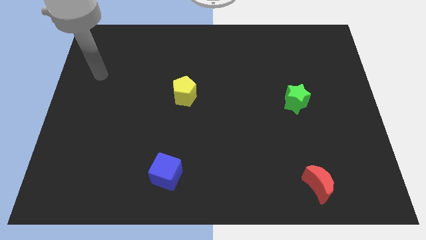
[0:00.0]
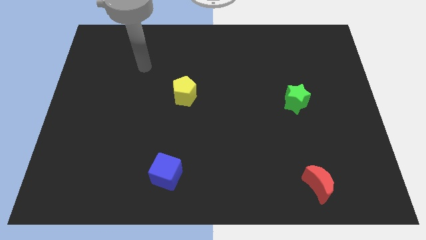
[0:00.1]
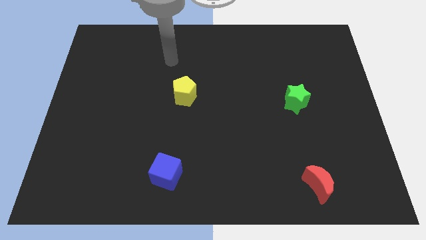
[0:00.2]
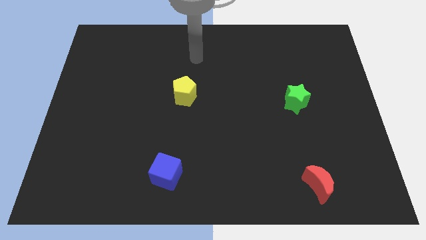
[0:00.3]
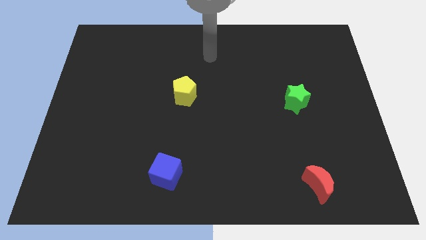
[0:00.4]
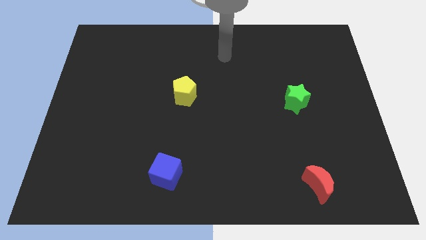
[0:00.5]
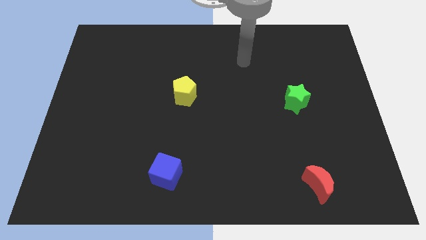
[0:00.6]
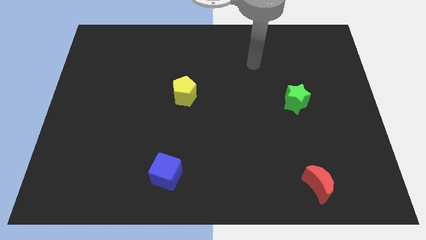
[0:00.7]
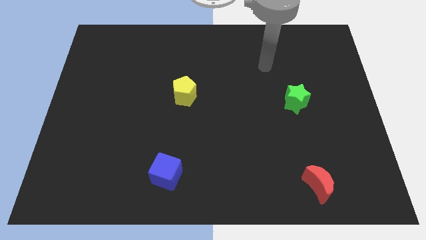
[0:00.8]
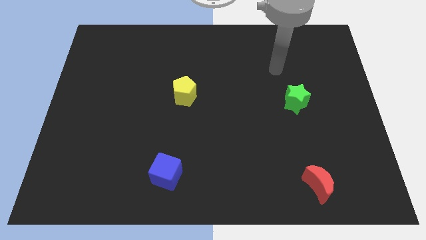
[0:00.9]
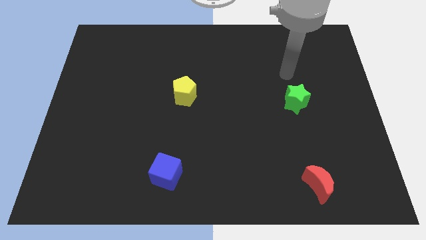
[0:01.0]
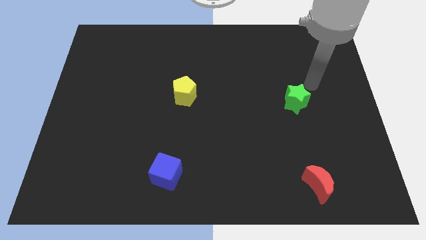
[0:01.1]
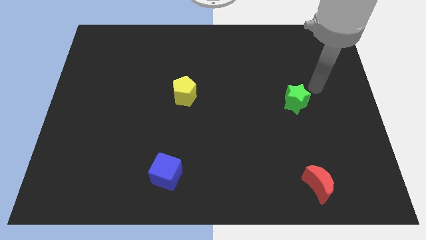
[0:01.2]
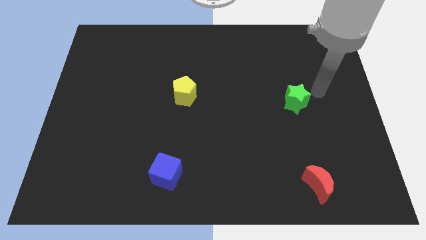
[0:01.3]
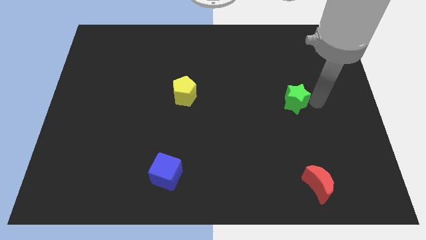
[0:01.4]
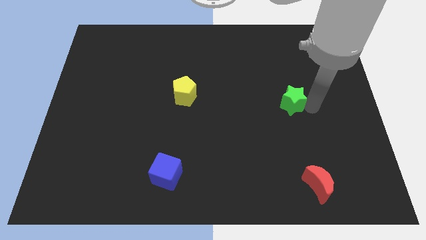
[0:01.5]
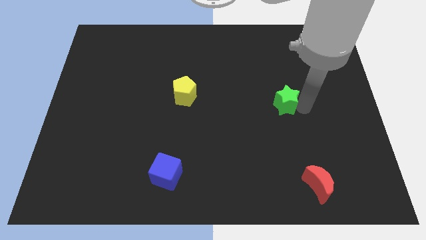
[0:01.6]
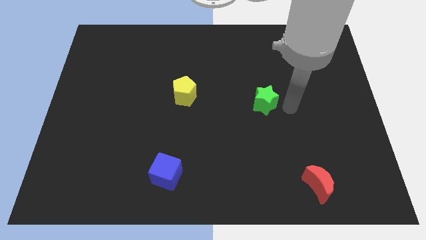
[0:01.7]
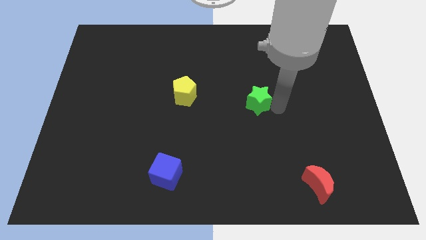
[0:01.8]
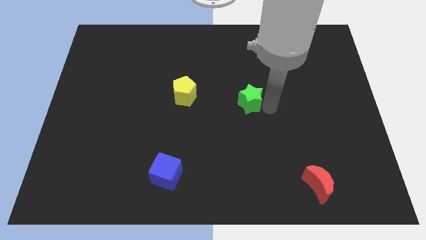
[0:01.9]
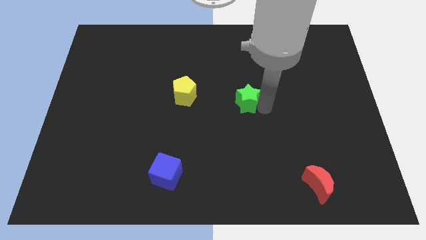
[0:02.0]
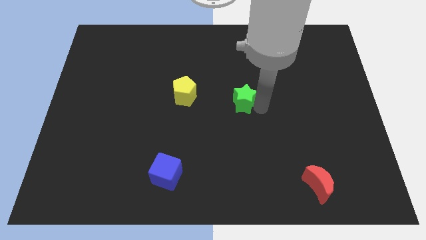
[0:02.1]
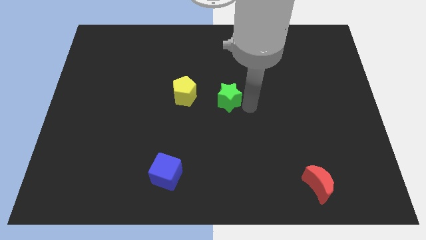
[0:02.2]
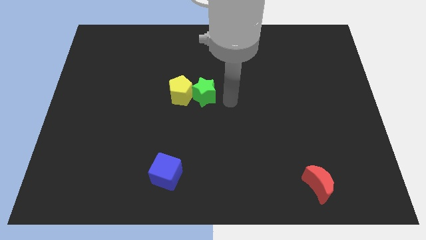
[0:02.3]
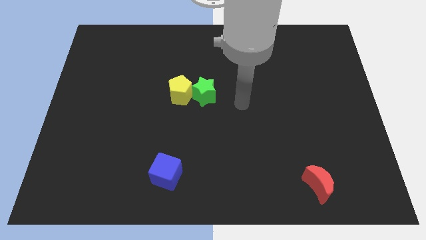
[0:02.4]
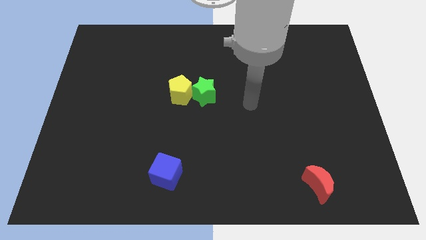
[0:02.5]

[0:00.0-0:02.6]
put the green block towards the yellow block

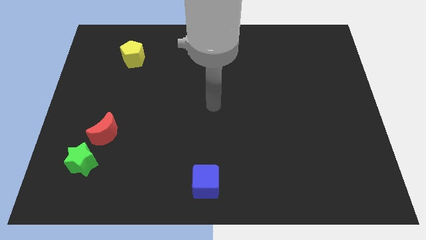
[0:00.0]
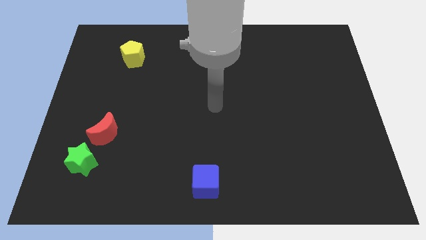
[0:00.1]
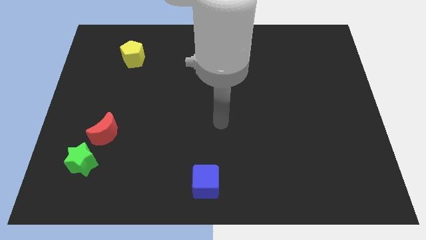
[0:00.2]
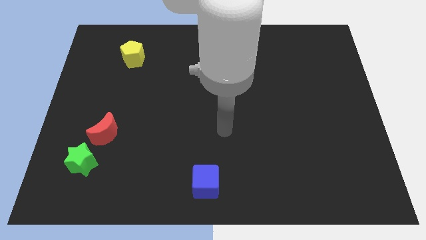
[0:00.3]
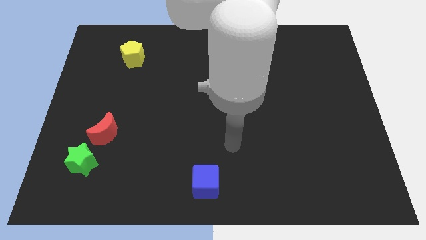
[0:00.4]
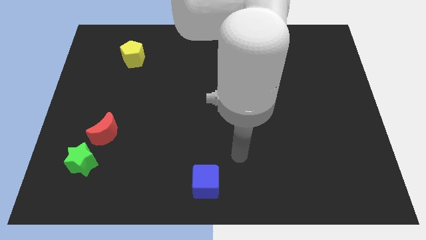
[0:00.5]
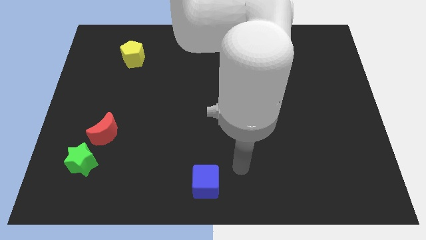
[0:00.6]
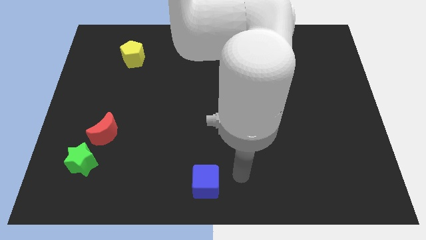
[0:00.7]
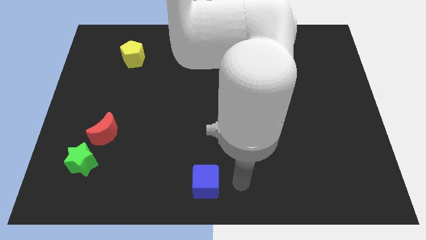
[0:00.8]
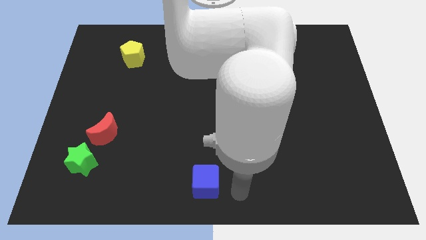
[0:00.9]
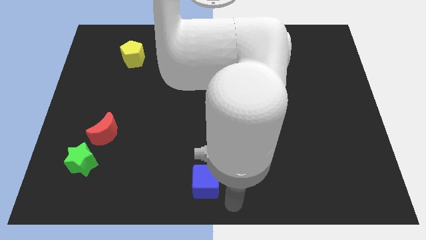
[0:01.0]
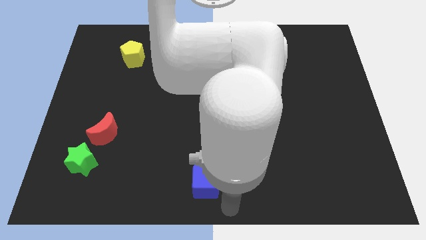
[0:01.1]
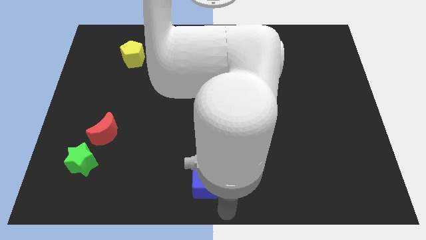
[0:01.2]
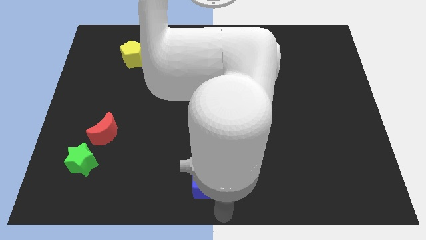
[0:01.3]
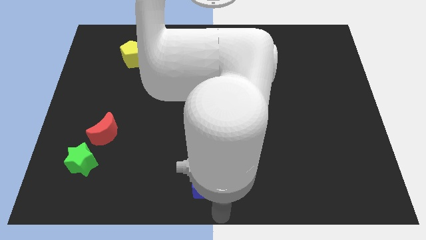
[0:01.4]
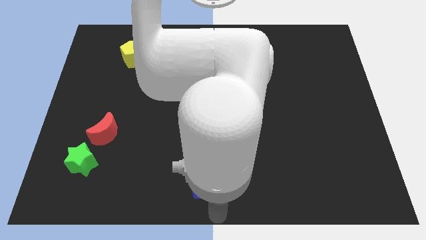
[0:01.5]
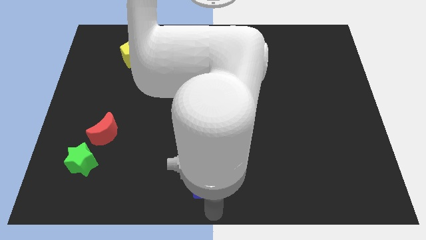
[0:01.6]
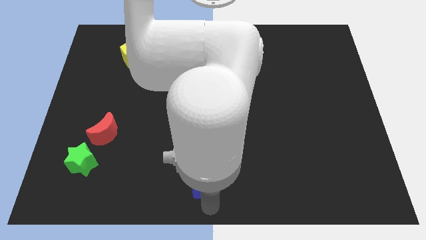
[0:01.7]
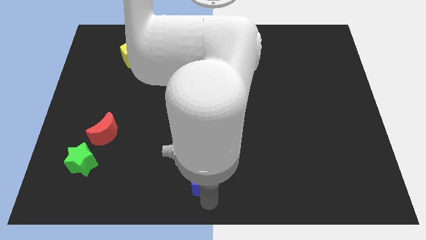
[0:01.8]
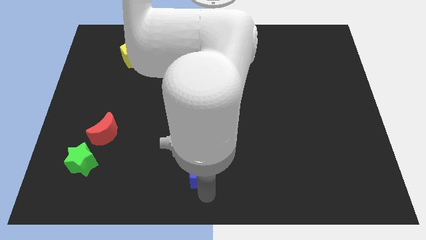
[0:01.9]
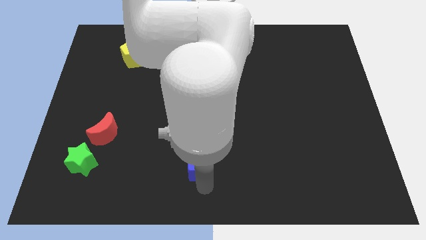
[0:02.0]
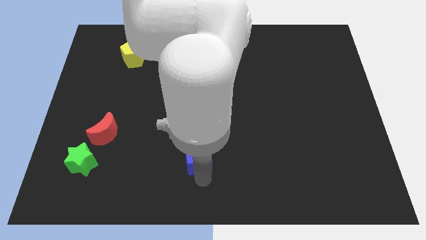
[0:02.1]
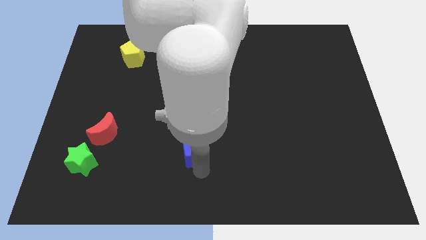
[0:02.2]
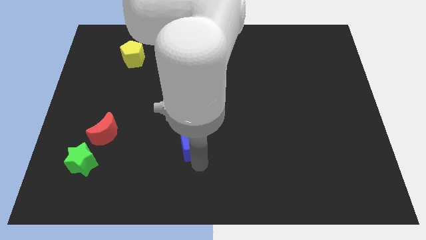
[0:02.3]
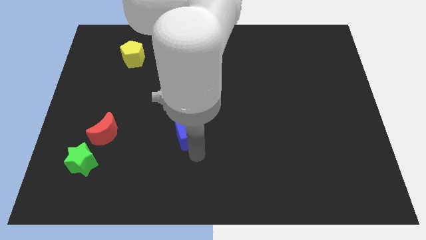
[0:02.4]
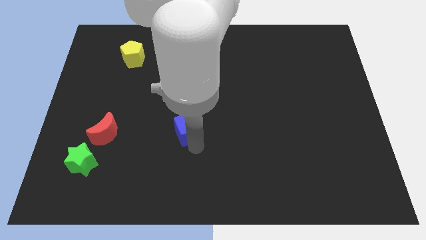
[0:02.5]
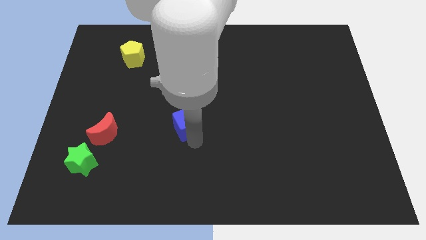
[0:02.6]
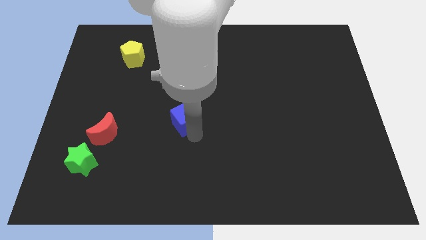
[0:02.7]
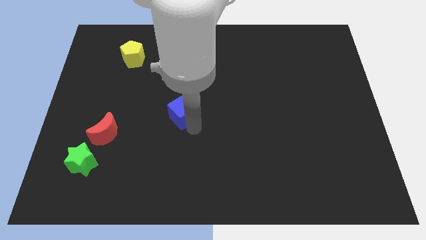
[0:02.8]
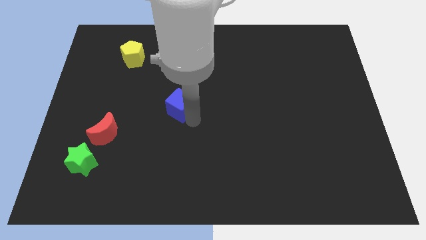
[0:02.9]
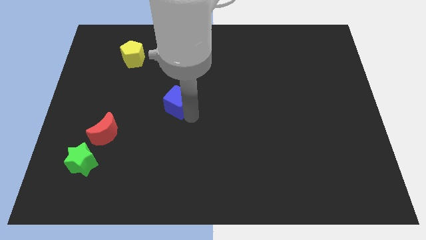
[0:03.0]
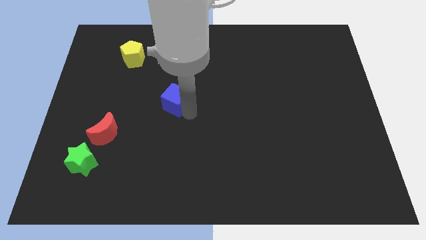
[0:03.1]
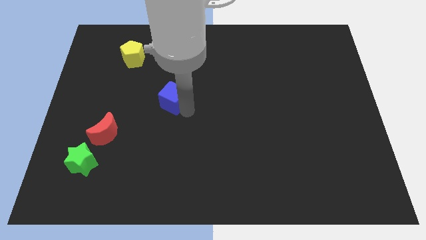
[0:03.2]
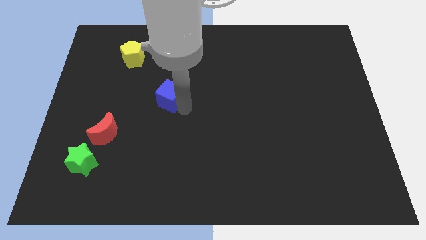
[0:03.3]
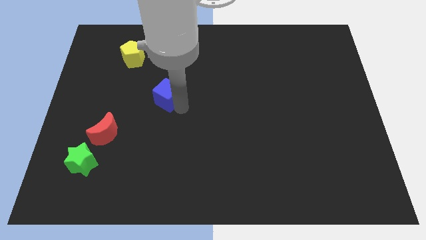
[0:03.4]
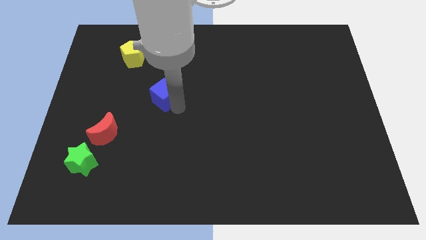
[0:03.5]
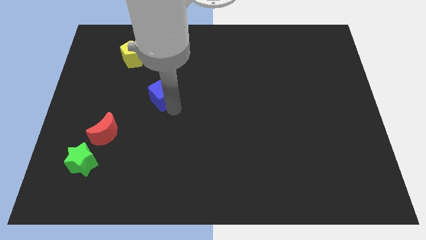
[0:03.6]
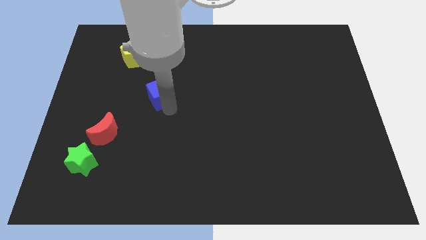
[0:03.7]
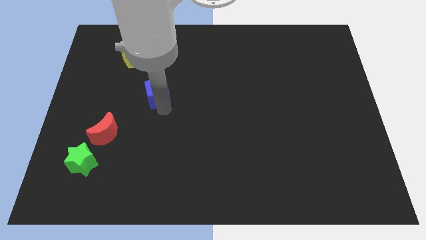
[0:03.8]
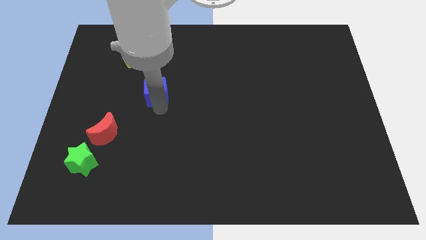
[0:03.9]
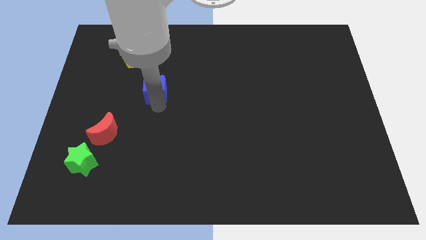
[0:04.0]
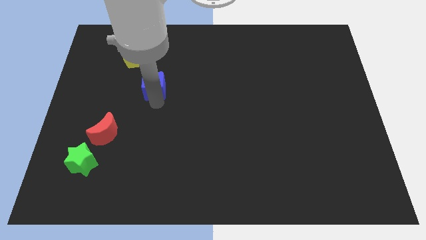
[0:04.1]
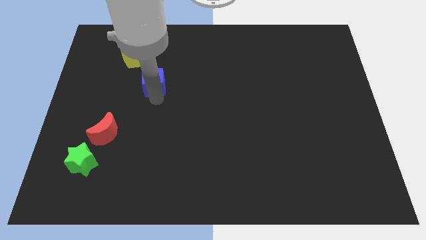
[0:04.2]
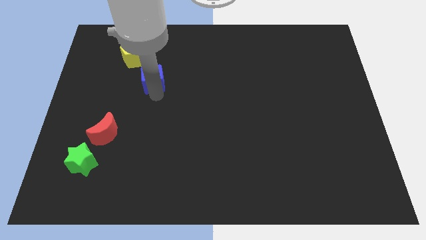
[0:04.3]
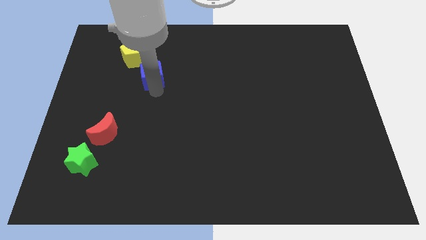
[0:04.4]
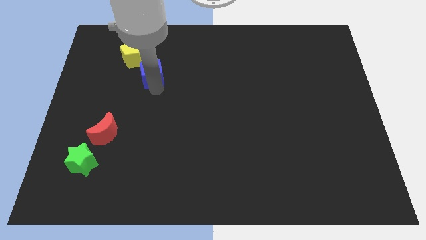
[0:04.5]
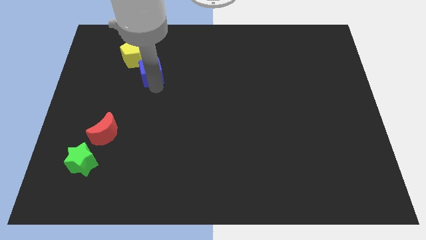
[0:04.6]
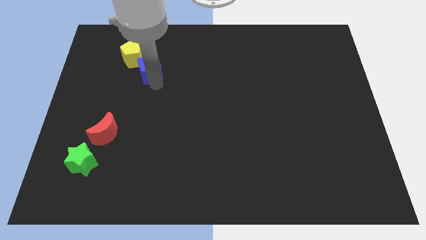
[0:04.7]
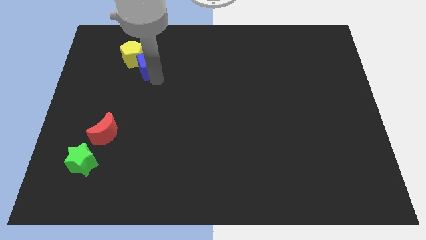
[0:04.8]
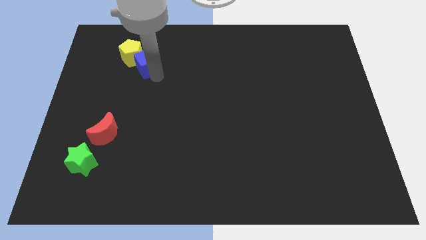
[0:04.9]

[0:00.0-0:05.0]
push the cube next to the yellow block

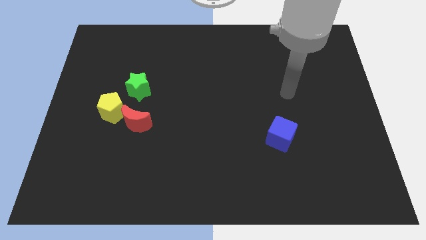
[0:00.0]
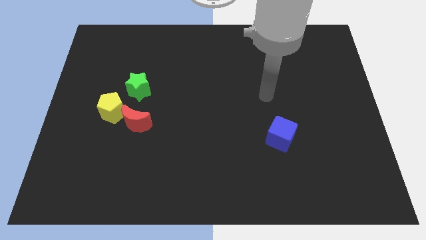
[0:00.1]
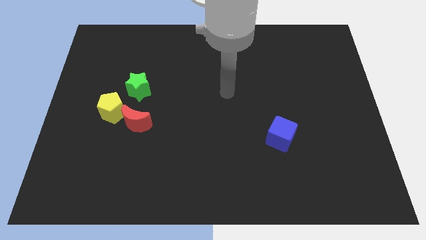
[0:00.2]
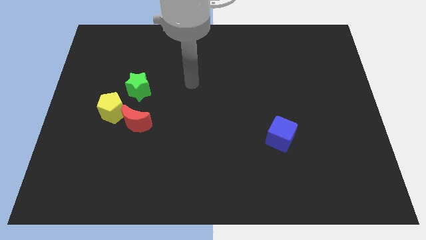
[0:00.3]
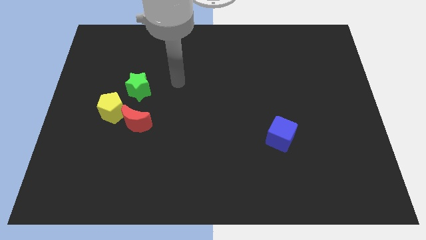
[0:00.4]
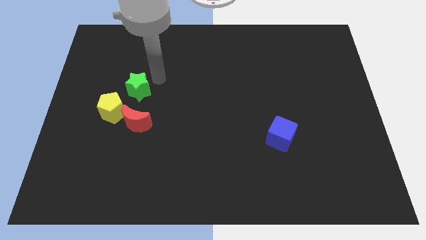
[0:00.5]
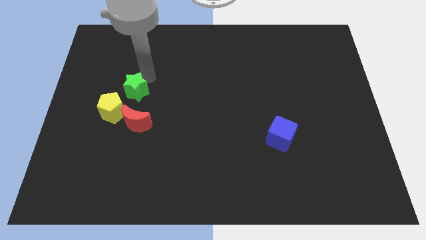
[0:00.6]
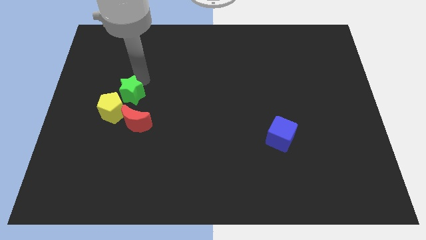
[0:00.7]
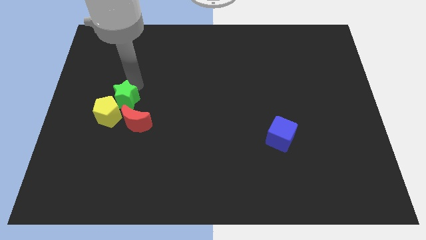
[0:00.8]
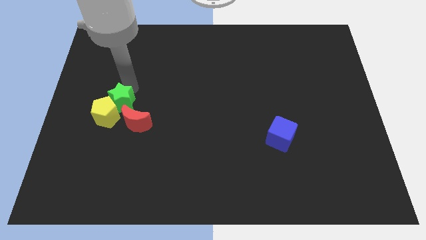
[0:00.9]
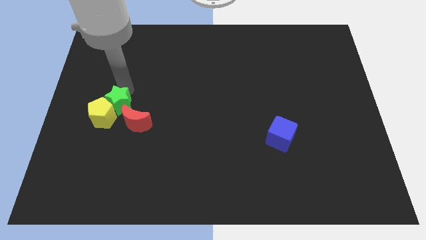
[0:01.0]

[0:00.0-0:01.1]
move the green block towards the yellow block

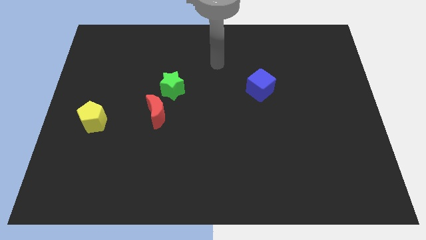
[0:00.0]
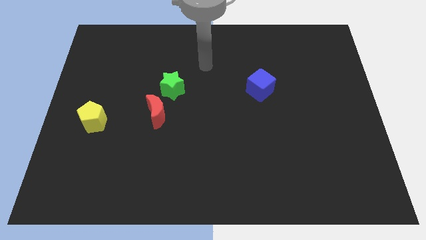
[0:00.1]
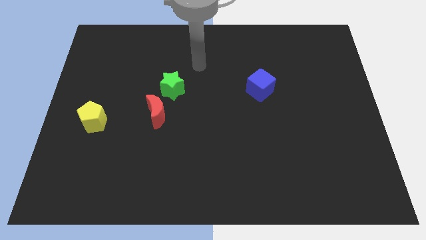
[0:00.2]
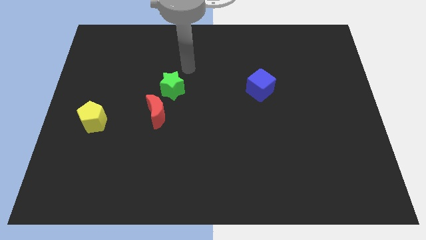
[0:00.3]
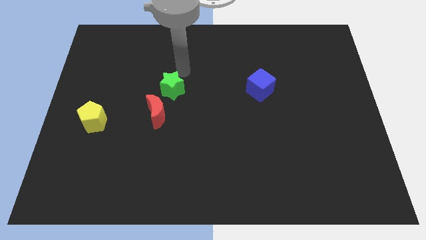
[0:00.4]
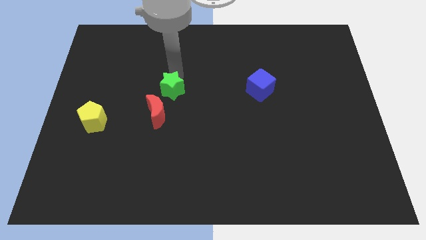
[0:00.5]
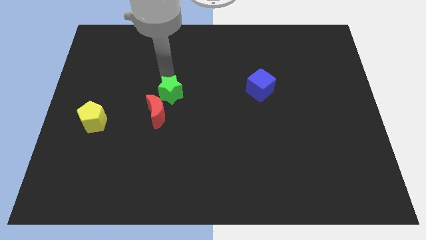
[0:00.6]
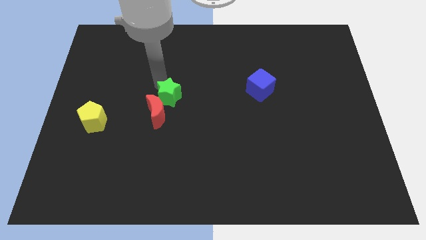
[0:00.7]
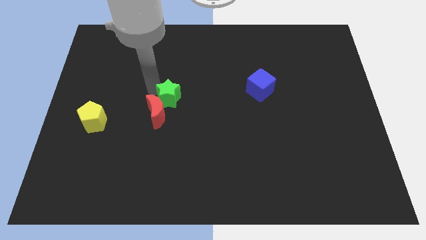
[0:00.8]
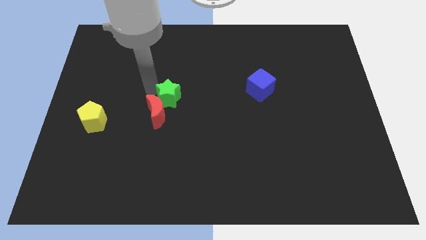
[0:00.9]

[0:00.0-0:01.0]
move the green block to the moon
